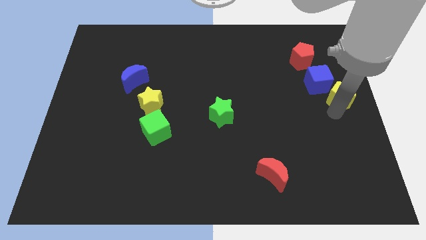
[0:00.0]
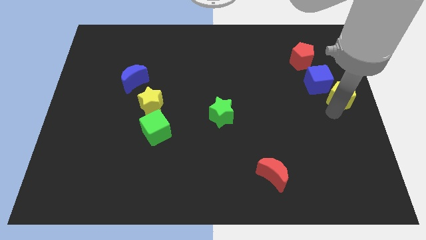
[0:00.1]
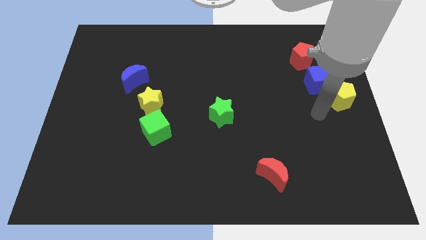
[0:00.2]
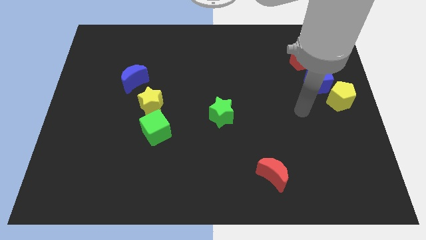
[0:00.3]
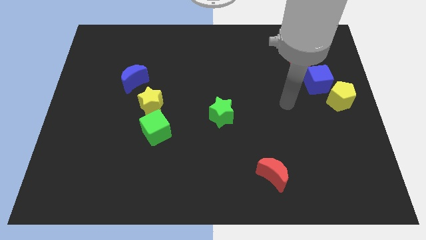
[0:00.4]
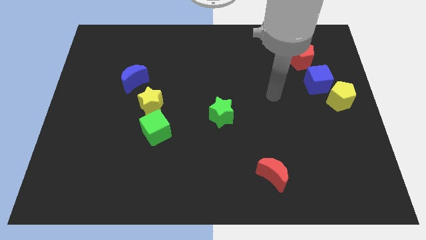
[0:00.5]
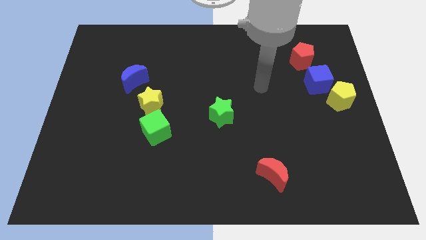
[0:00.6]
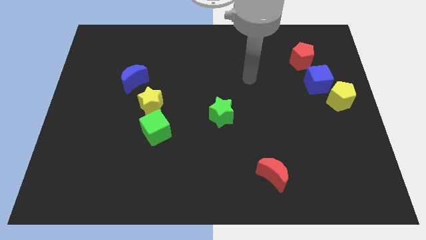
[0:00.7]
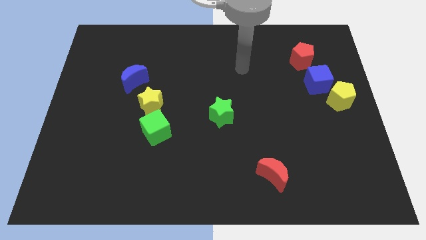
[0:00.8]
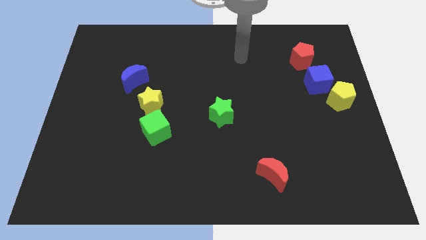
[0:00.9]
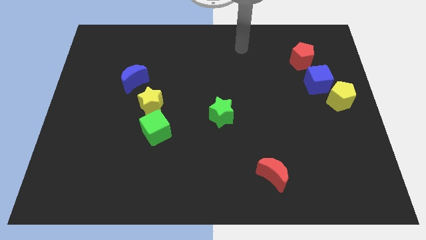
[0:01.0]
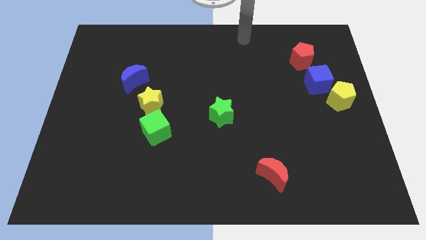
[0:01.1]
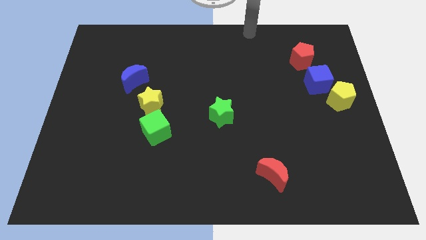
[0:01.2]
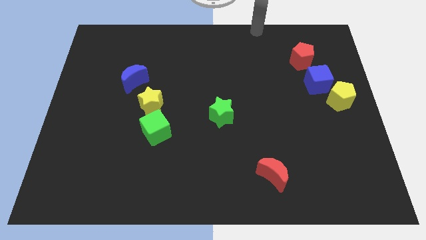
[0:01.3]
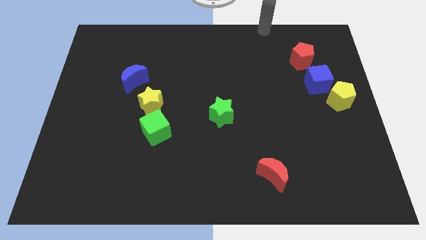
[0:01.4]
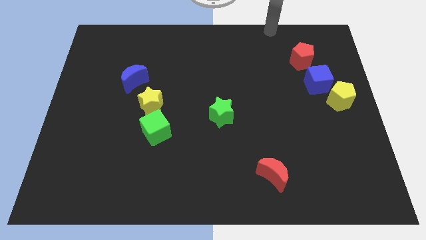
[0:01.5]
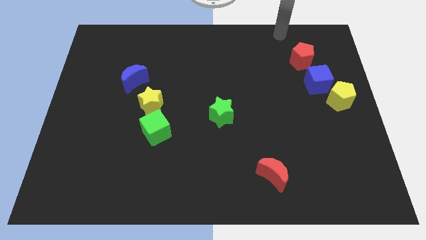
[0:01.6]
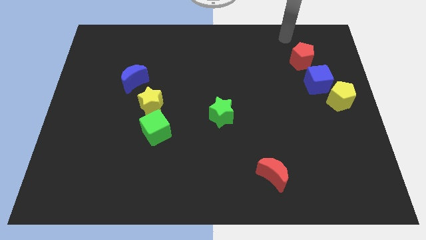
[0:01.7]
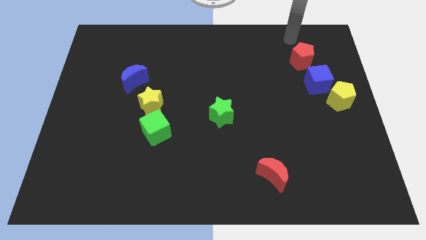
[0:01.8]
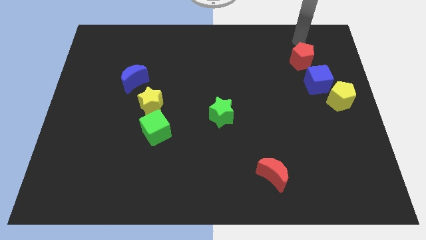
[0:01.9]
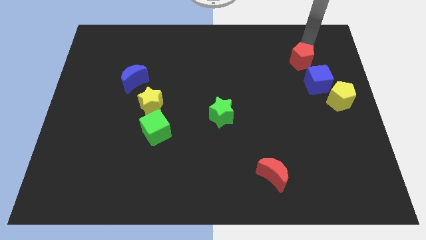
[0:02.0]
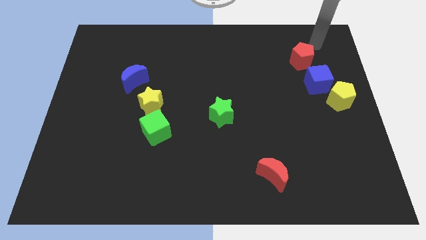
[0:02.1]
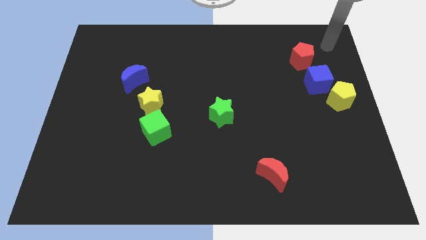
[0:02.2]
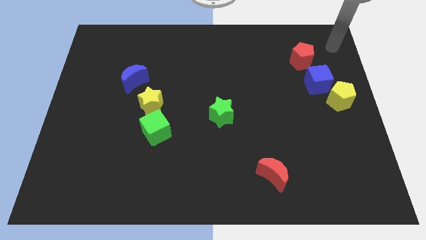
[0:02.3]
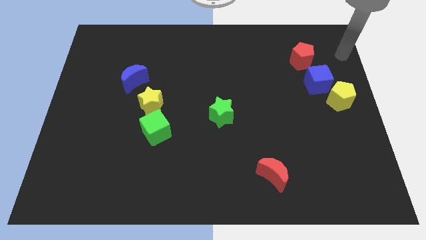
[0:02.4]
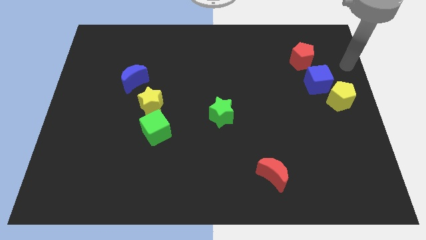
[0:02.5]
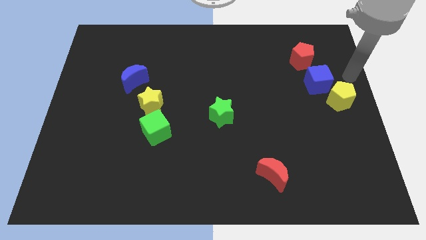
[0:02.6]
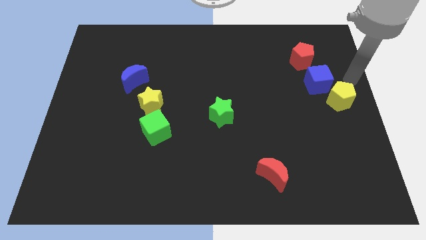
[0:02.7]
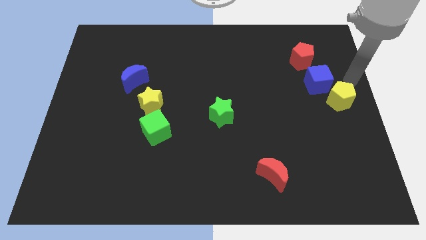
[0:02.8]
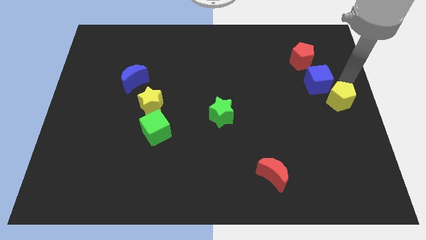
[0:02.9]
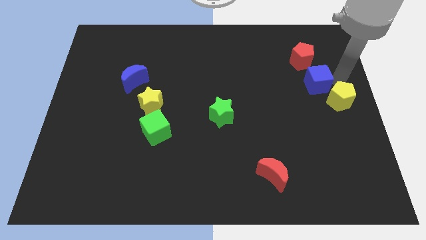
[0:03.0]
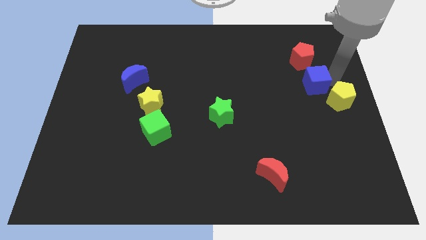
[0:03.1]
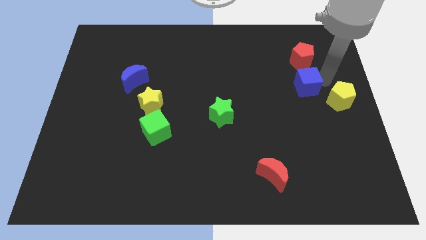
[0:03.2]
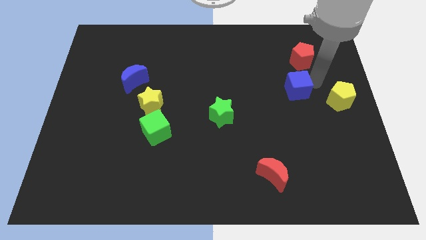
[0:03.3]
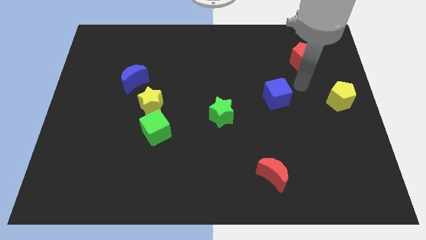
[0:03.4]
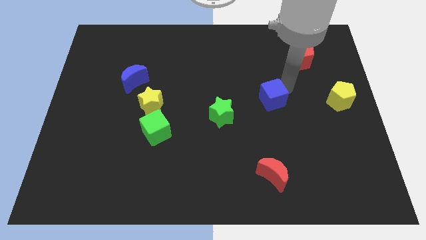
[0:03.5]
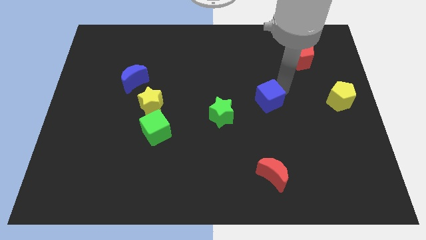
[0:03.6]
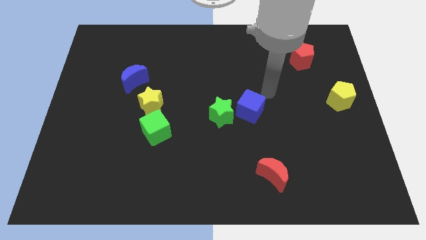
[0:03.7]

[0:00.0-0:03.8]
separate the blue cube from the red pentagon and the yellow pentagon

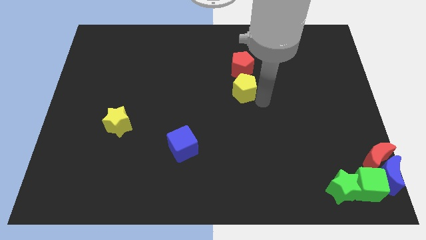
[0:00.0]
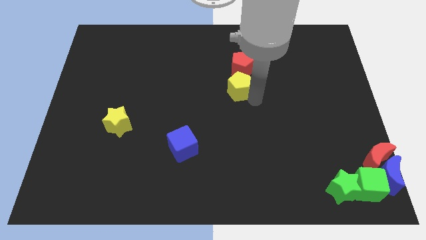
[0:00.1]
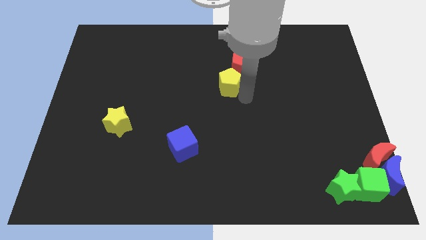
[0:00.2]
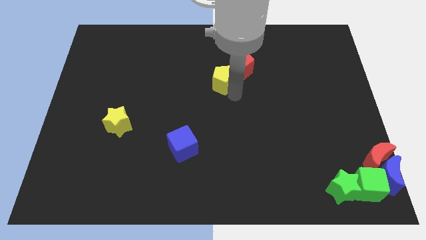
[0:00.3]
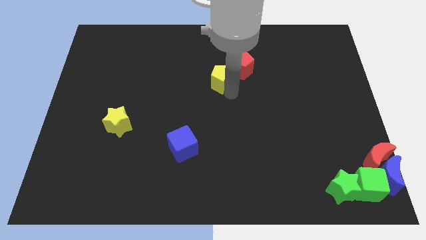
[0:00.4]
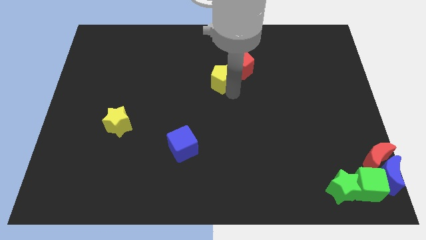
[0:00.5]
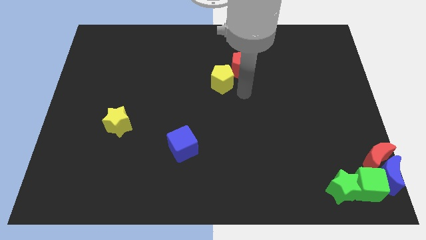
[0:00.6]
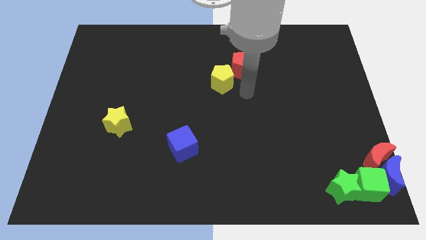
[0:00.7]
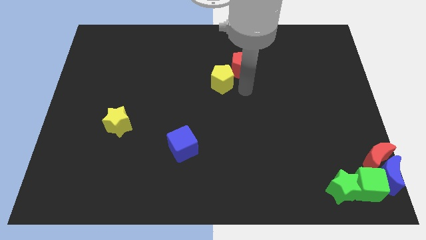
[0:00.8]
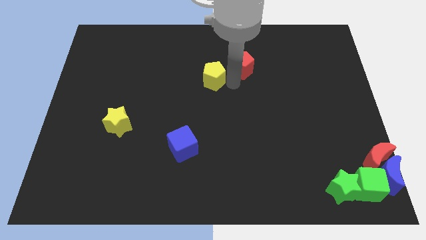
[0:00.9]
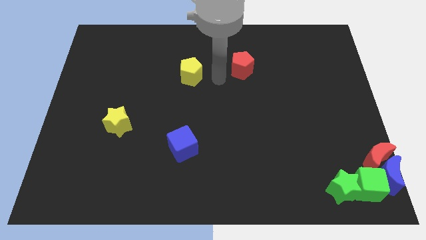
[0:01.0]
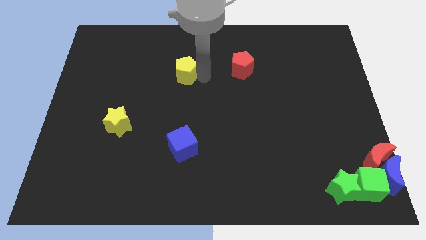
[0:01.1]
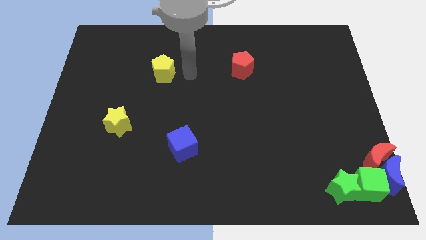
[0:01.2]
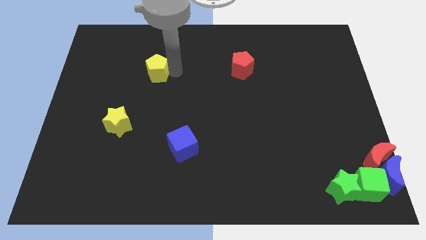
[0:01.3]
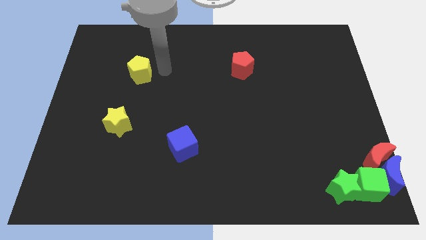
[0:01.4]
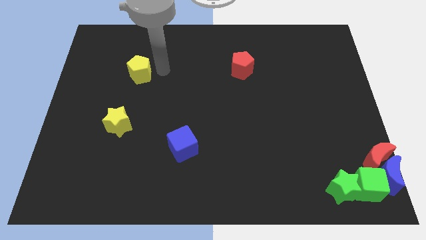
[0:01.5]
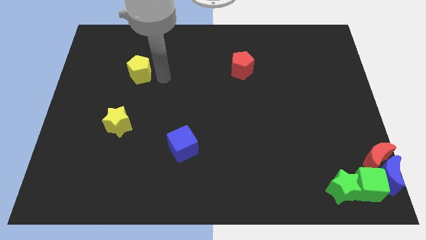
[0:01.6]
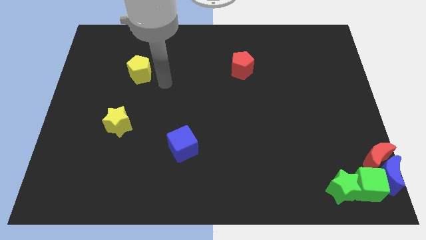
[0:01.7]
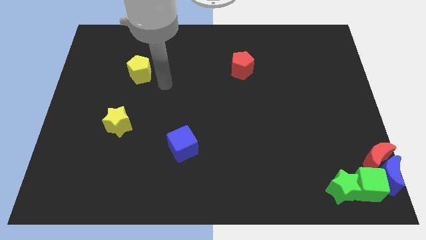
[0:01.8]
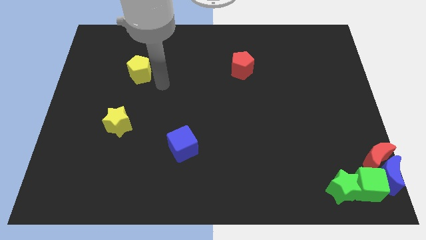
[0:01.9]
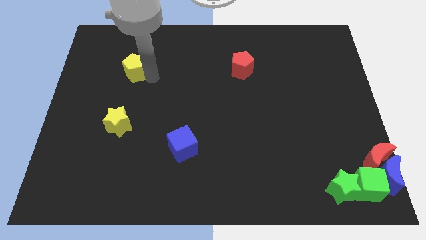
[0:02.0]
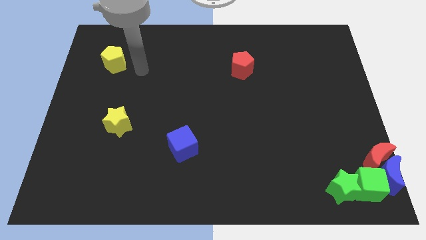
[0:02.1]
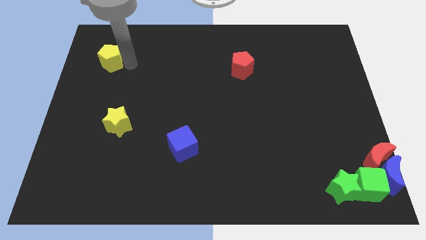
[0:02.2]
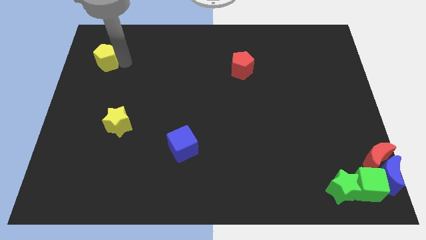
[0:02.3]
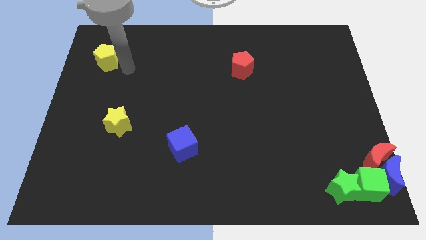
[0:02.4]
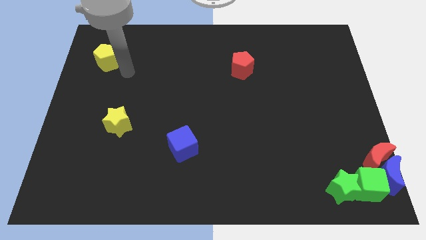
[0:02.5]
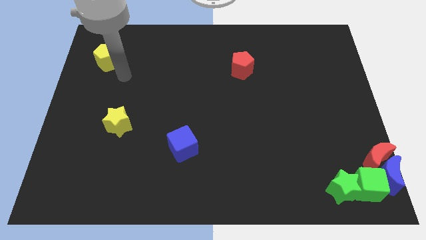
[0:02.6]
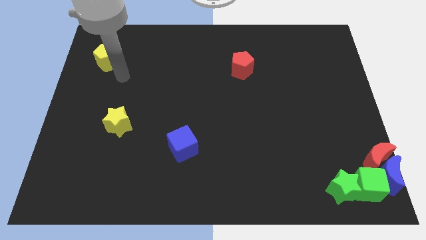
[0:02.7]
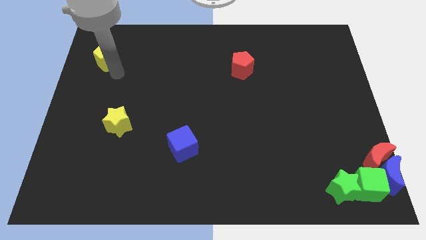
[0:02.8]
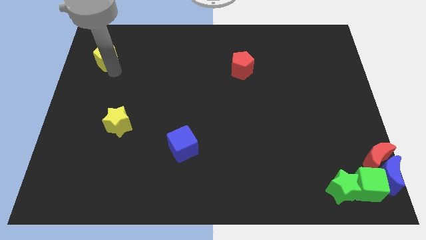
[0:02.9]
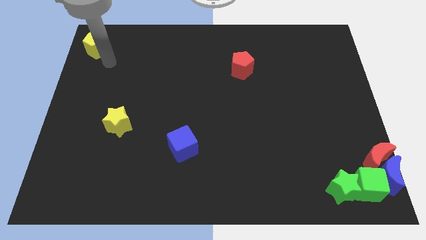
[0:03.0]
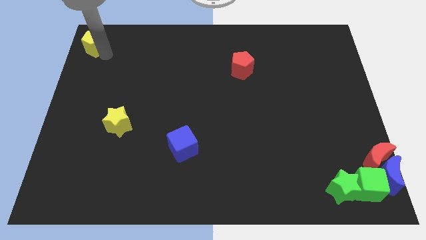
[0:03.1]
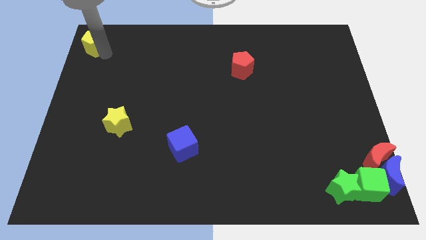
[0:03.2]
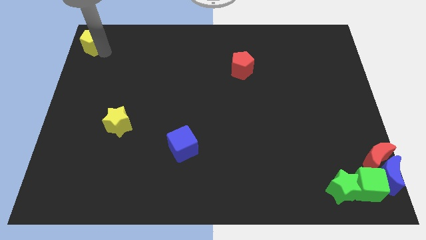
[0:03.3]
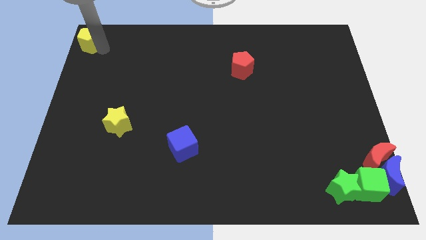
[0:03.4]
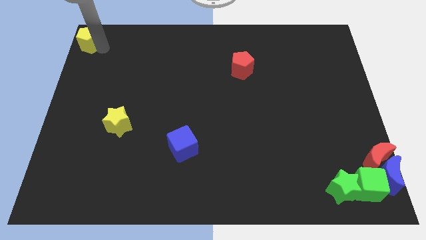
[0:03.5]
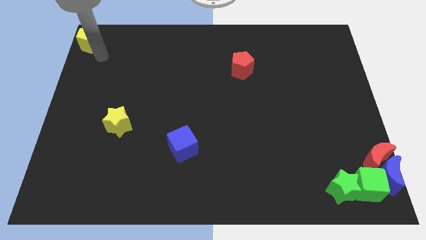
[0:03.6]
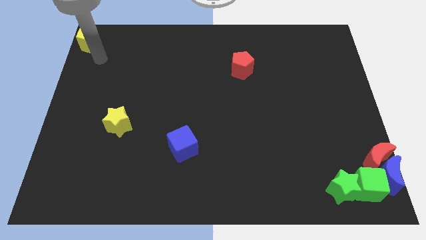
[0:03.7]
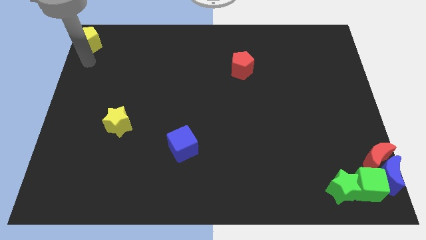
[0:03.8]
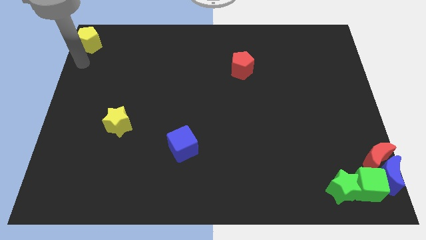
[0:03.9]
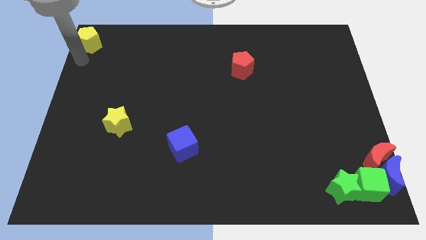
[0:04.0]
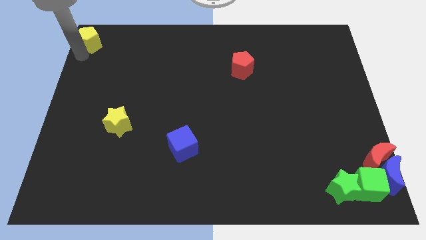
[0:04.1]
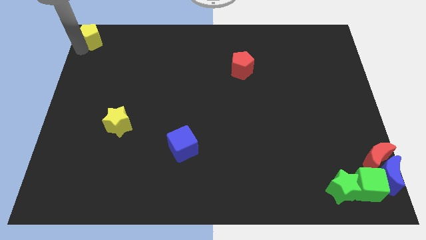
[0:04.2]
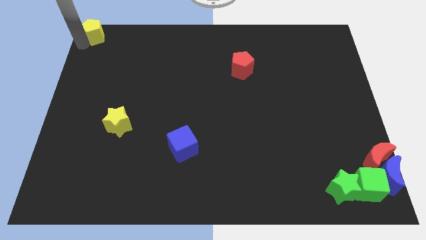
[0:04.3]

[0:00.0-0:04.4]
place yellow pentagon to the top left corner of the board

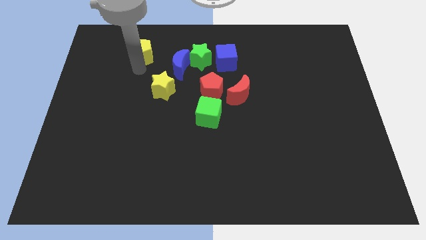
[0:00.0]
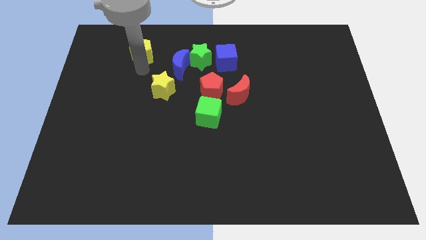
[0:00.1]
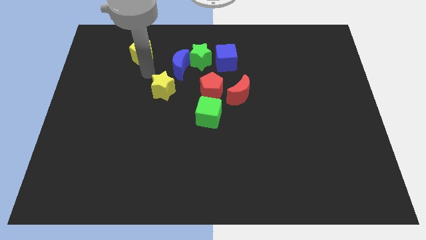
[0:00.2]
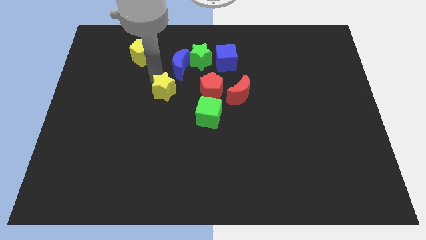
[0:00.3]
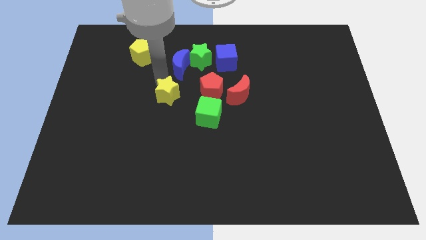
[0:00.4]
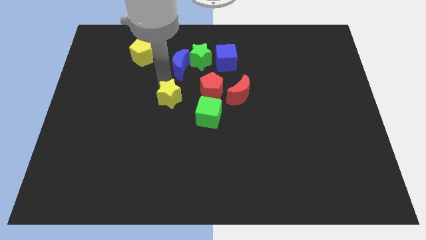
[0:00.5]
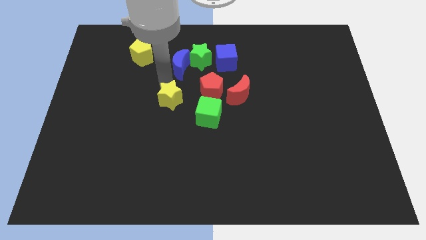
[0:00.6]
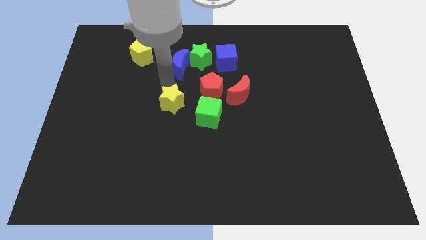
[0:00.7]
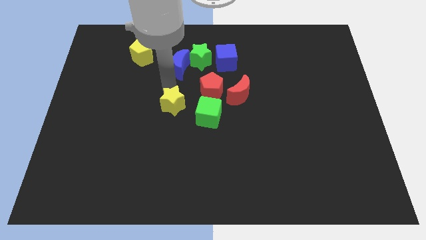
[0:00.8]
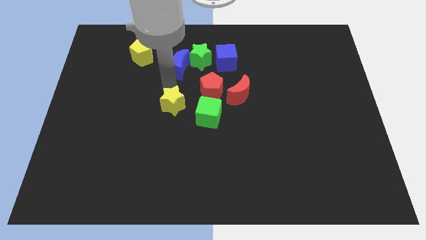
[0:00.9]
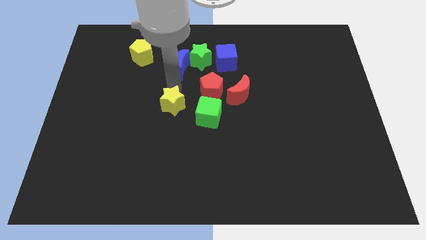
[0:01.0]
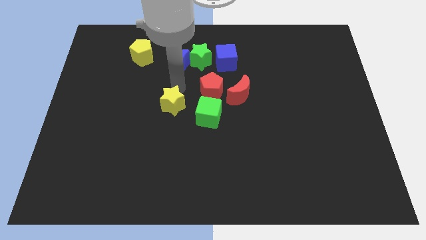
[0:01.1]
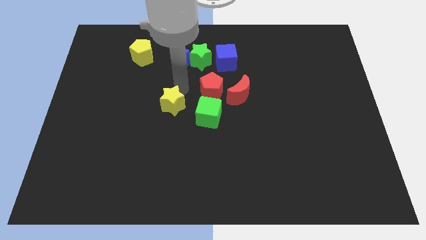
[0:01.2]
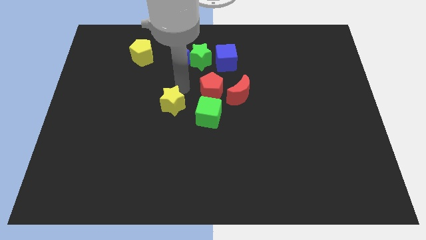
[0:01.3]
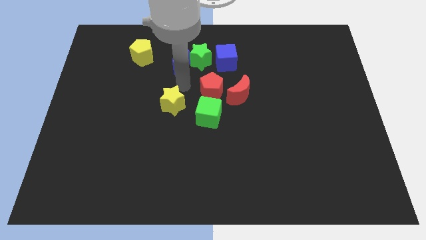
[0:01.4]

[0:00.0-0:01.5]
place the yellow star below the blue crescent
